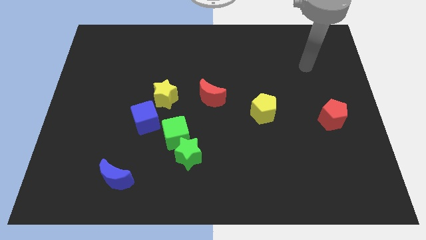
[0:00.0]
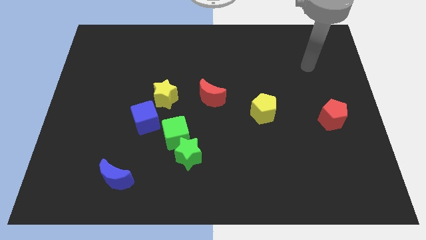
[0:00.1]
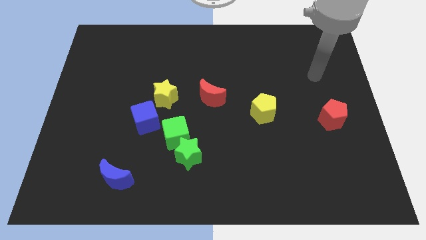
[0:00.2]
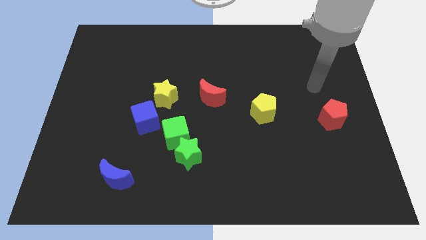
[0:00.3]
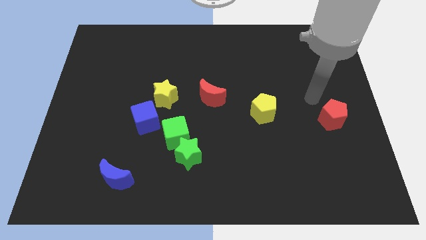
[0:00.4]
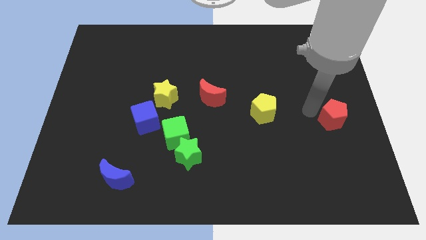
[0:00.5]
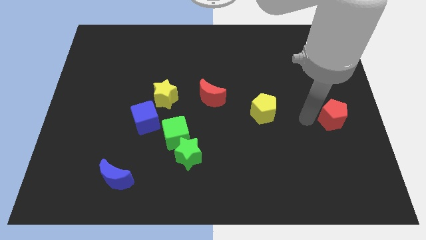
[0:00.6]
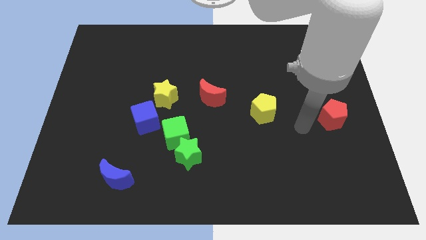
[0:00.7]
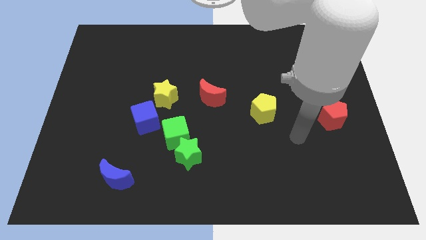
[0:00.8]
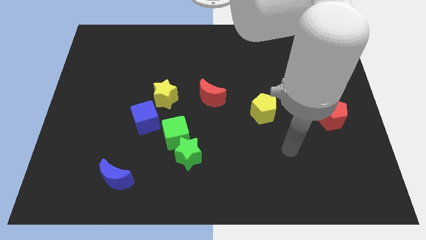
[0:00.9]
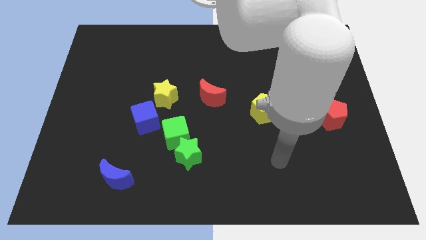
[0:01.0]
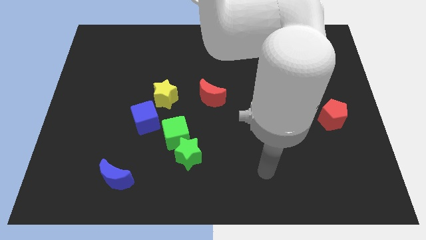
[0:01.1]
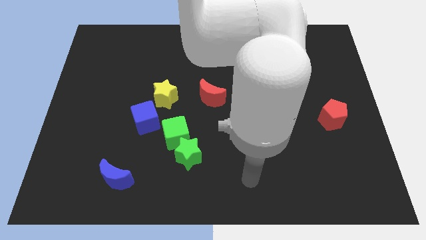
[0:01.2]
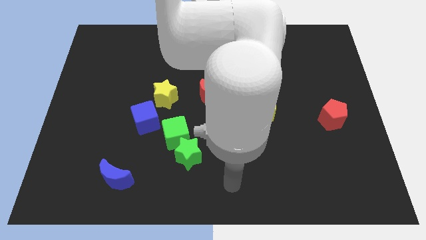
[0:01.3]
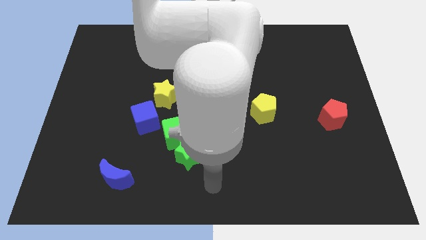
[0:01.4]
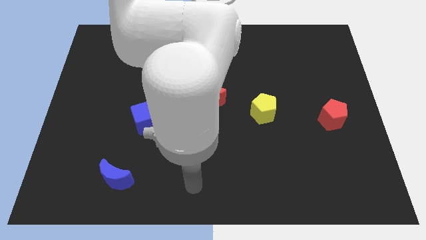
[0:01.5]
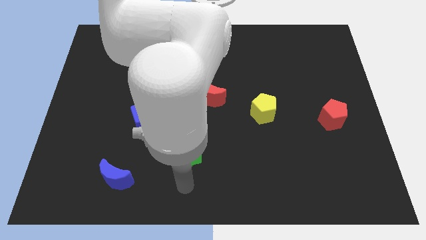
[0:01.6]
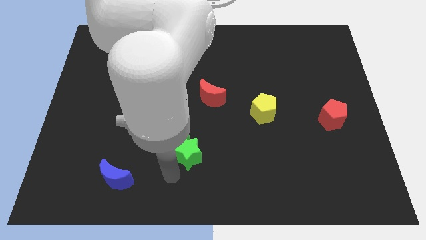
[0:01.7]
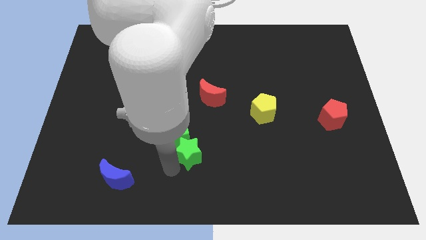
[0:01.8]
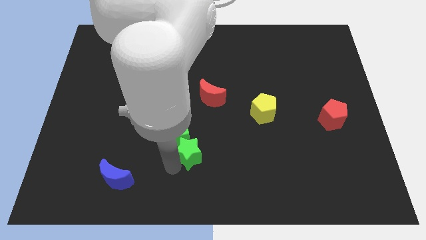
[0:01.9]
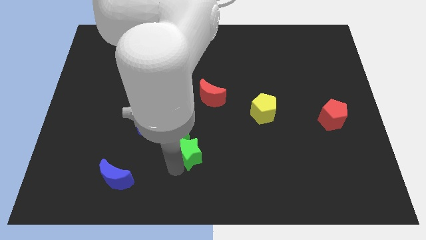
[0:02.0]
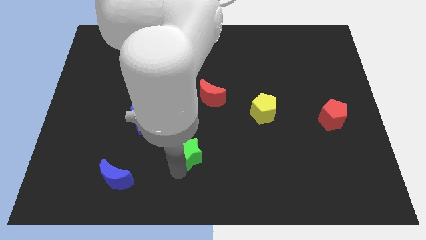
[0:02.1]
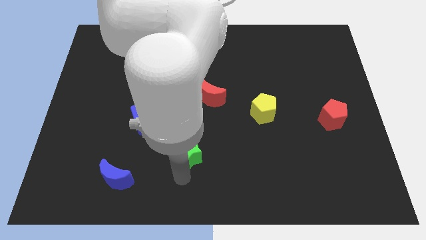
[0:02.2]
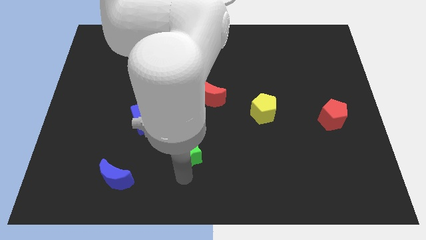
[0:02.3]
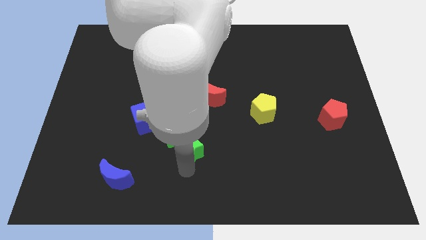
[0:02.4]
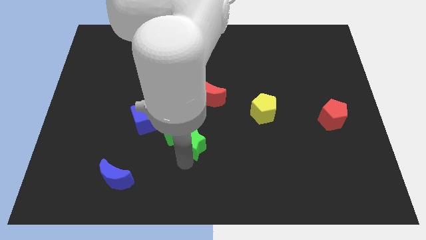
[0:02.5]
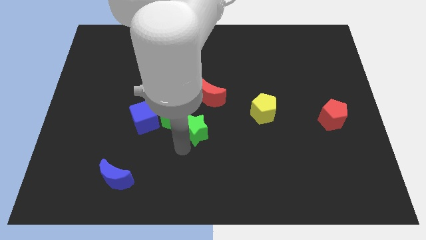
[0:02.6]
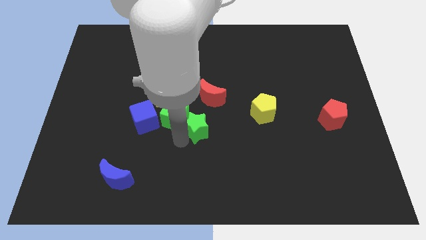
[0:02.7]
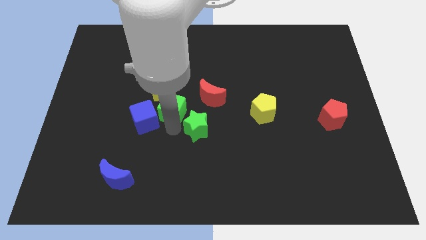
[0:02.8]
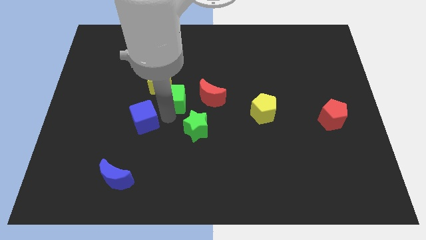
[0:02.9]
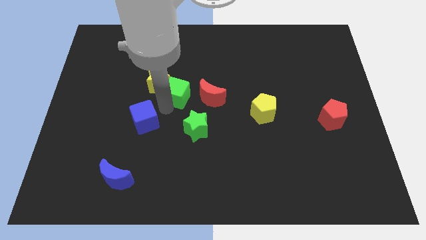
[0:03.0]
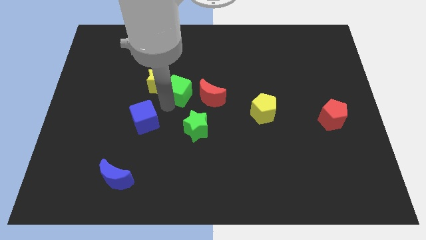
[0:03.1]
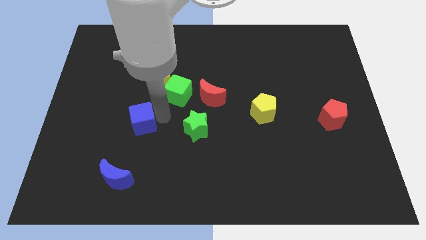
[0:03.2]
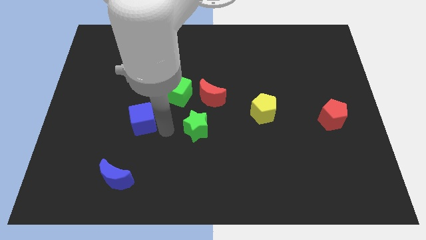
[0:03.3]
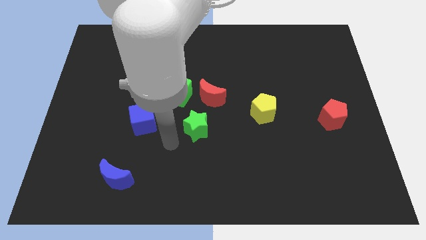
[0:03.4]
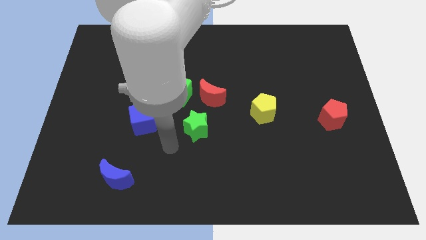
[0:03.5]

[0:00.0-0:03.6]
go and separate the two green objects

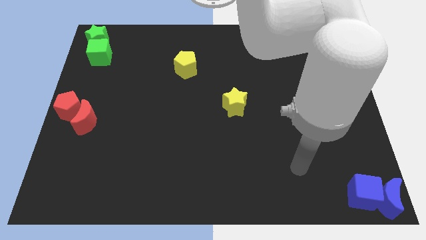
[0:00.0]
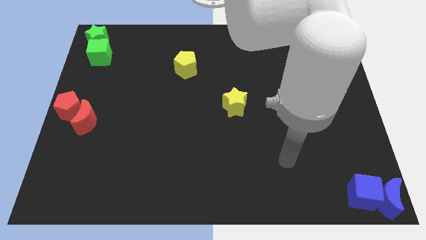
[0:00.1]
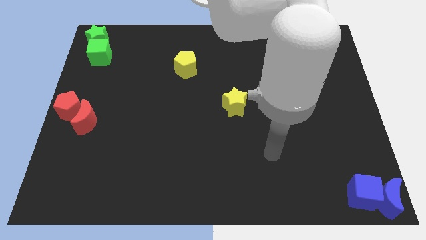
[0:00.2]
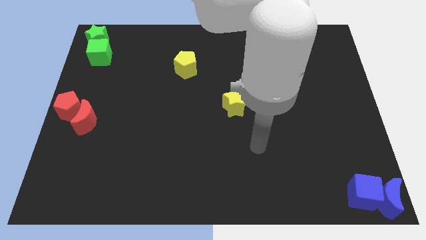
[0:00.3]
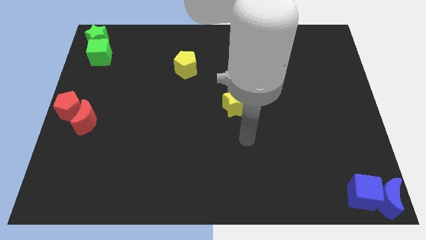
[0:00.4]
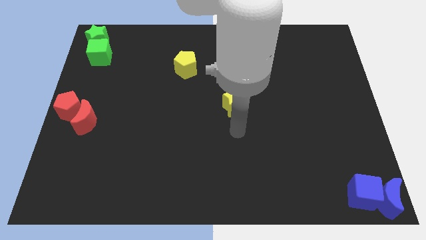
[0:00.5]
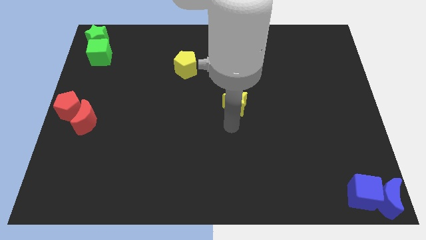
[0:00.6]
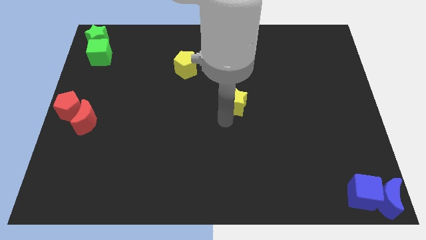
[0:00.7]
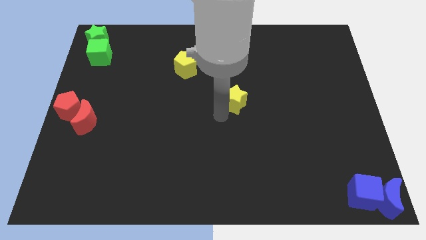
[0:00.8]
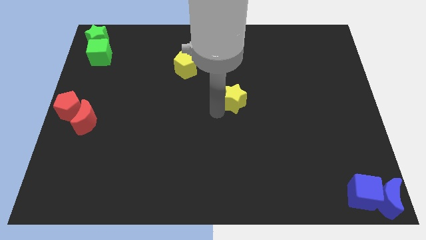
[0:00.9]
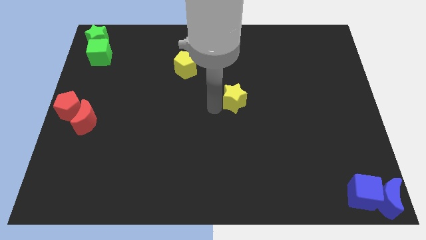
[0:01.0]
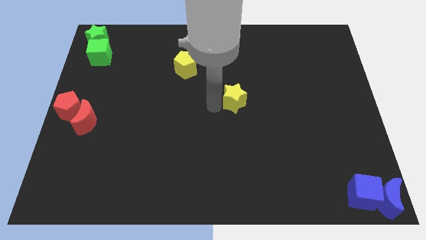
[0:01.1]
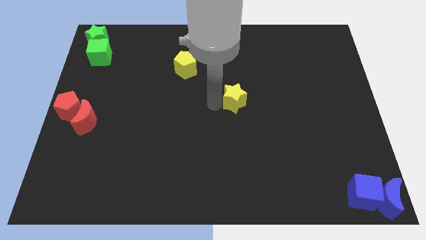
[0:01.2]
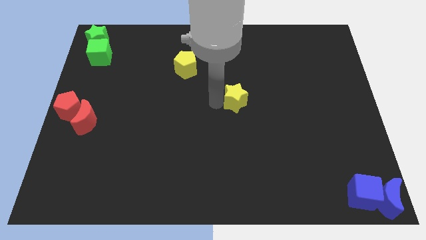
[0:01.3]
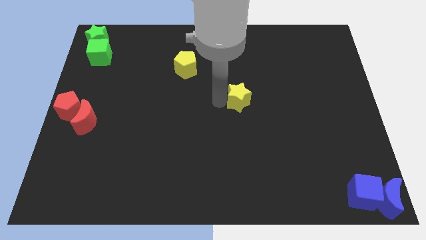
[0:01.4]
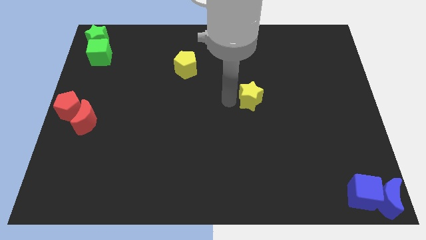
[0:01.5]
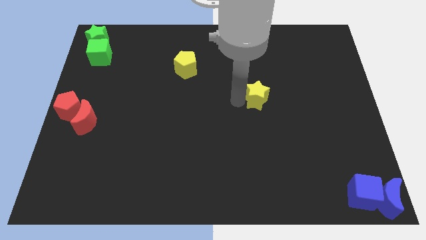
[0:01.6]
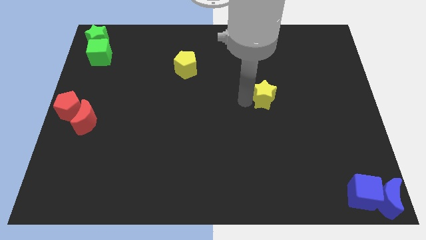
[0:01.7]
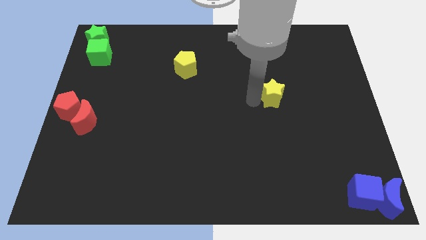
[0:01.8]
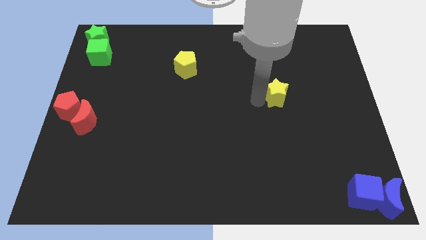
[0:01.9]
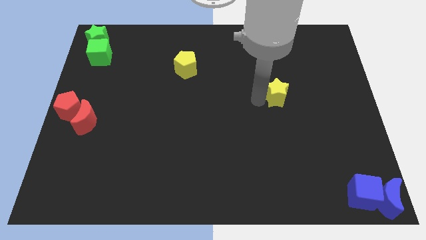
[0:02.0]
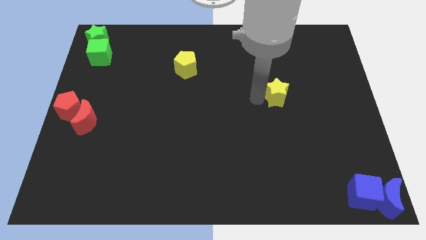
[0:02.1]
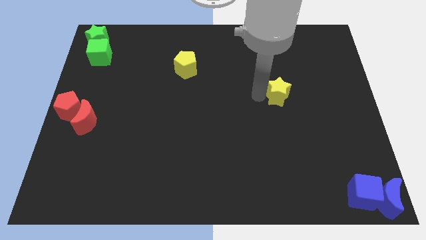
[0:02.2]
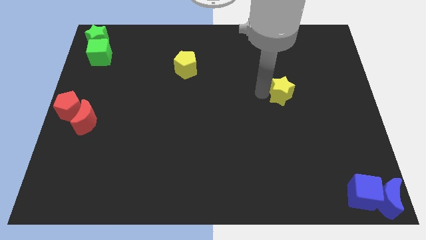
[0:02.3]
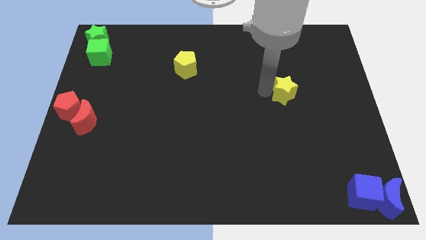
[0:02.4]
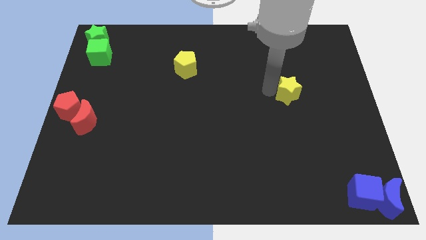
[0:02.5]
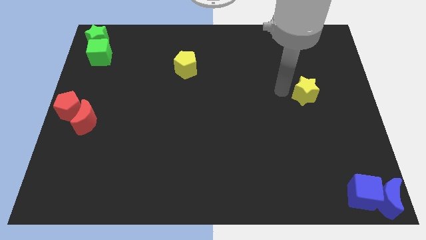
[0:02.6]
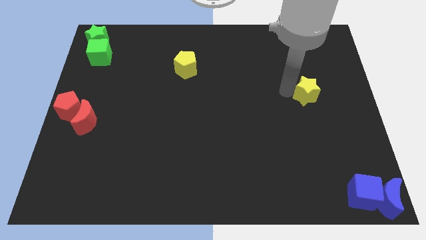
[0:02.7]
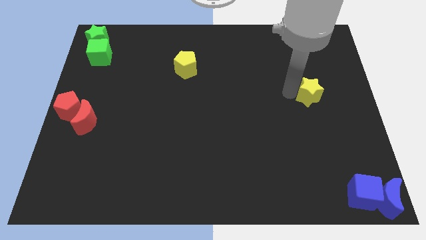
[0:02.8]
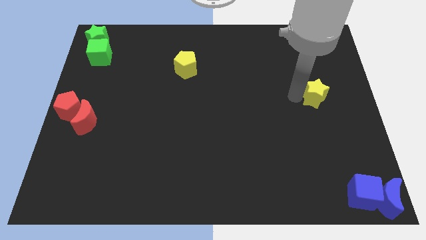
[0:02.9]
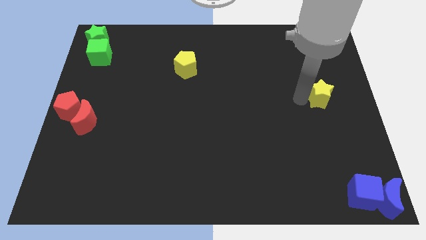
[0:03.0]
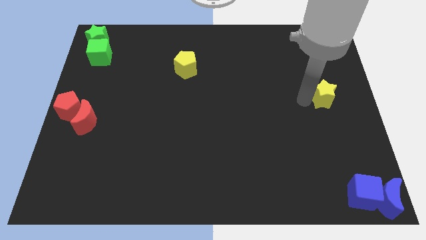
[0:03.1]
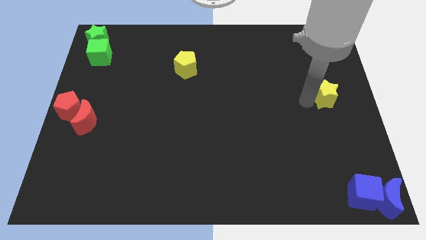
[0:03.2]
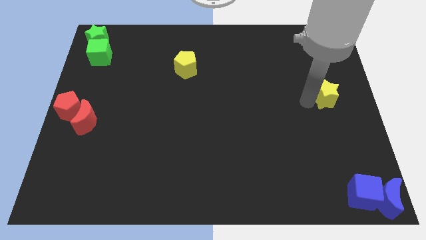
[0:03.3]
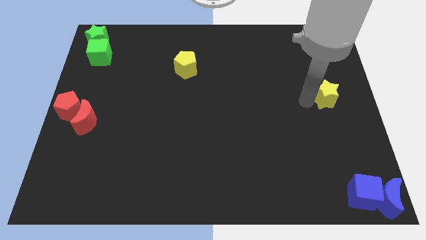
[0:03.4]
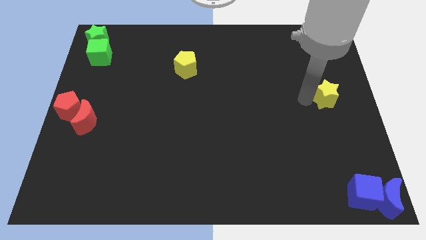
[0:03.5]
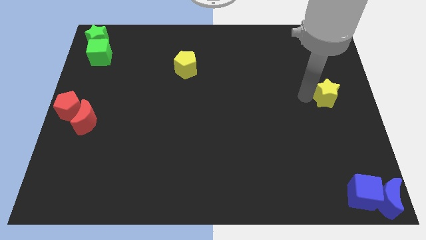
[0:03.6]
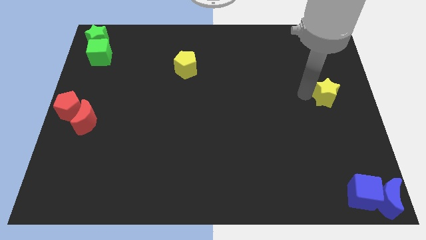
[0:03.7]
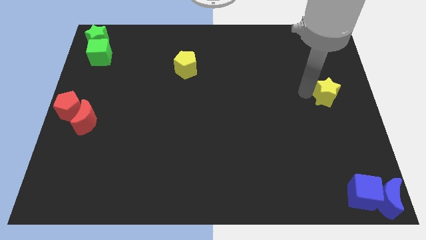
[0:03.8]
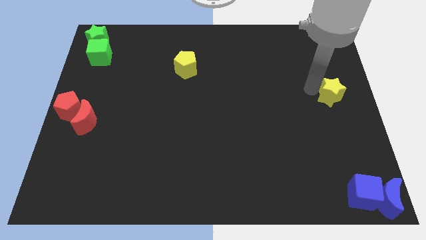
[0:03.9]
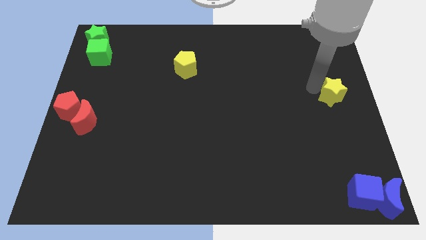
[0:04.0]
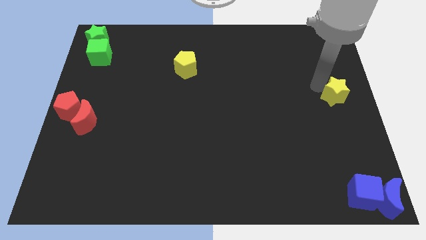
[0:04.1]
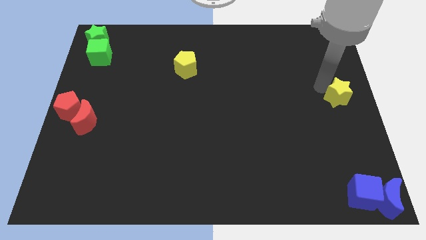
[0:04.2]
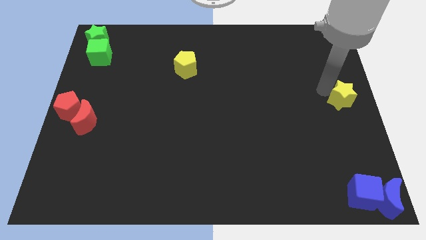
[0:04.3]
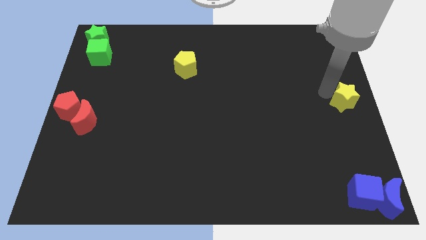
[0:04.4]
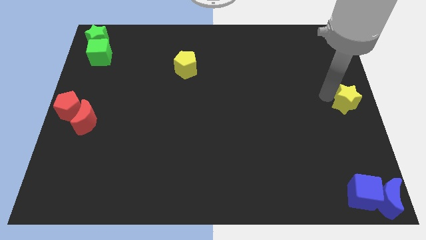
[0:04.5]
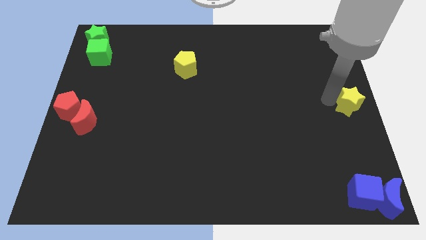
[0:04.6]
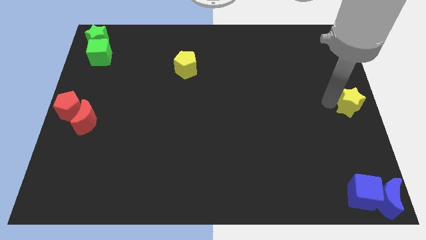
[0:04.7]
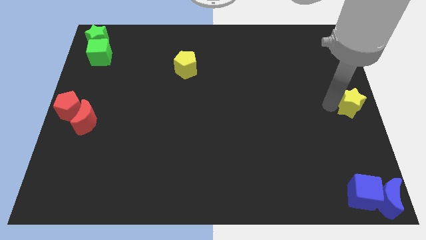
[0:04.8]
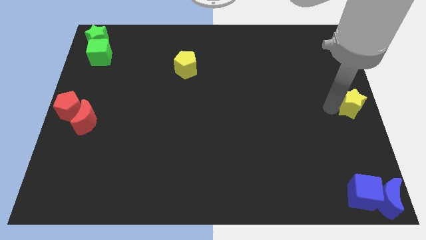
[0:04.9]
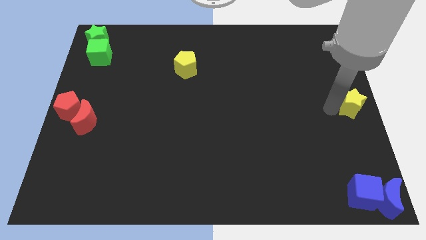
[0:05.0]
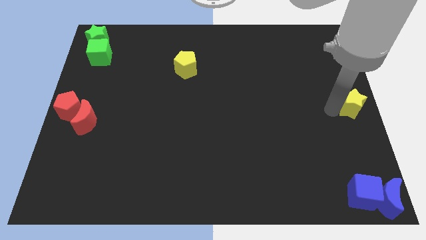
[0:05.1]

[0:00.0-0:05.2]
push the yellow star to the right center of the board
